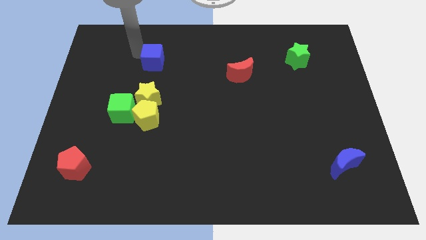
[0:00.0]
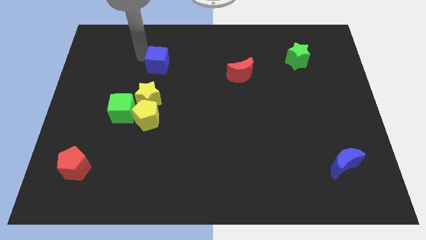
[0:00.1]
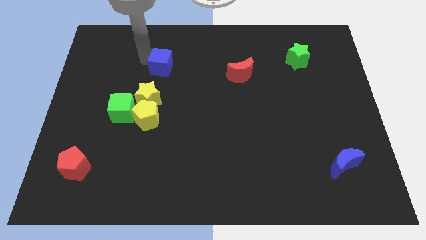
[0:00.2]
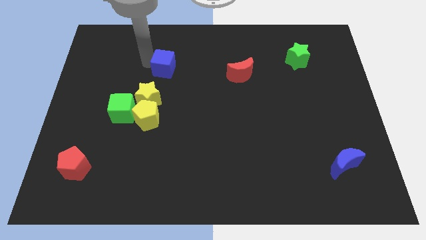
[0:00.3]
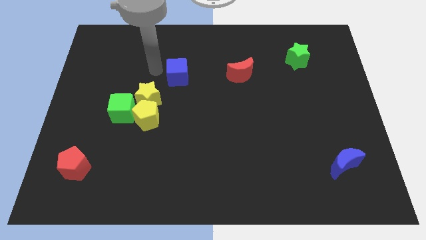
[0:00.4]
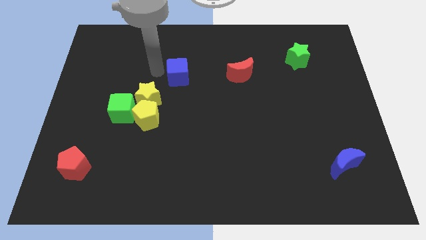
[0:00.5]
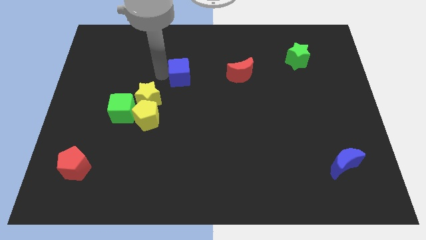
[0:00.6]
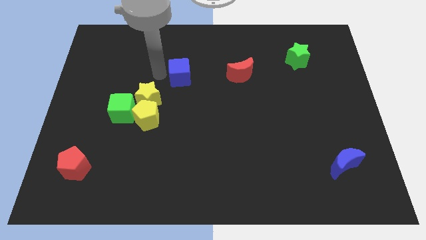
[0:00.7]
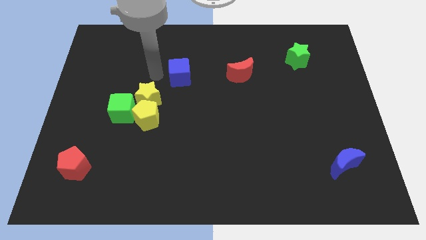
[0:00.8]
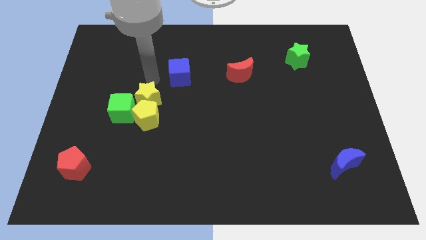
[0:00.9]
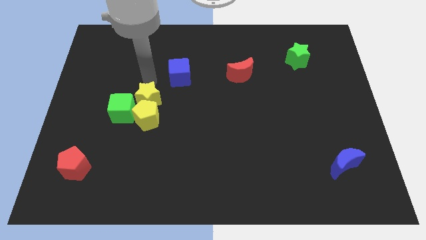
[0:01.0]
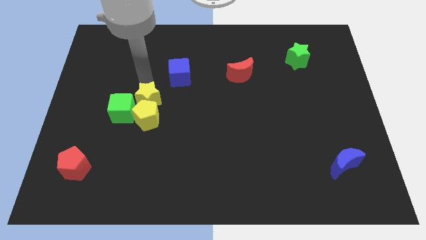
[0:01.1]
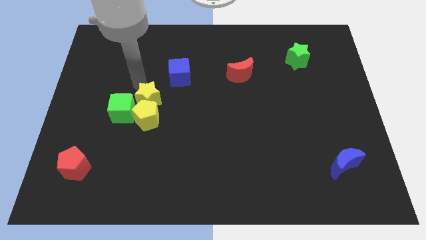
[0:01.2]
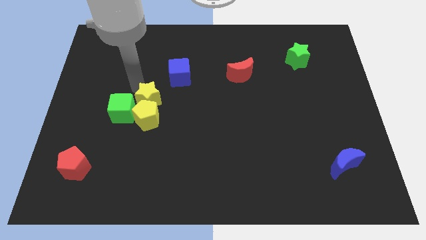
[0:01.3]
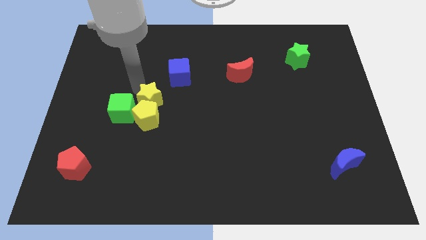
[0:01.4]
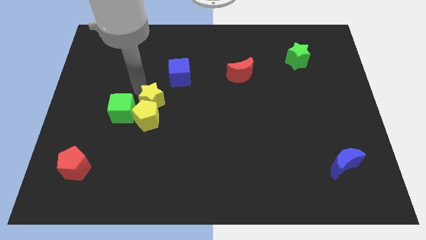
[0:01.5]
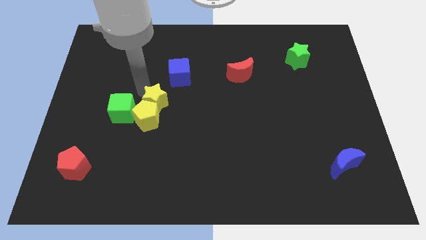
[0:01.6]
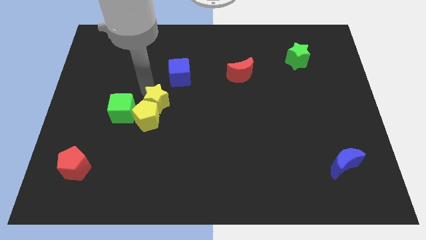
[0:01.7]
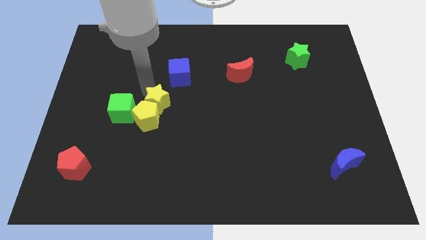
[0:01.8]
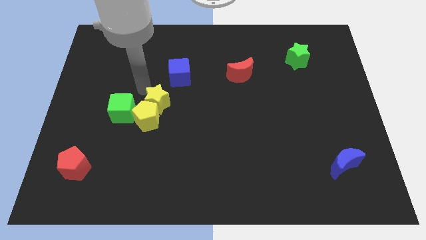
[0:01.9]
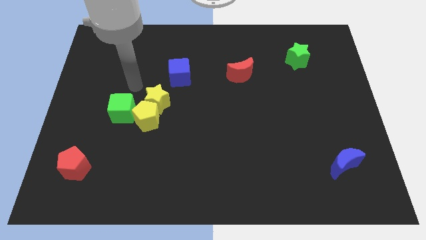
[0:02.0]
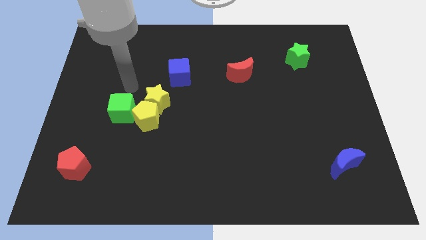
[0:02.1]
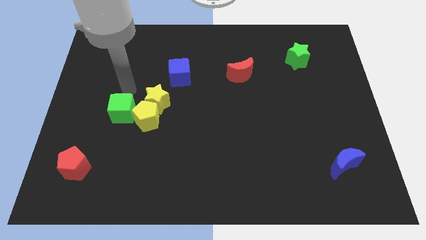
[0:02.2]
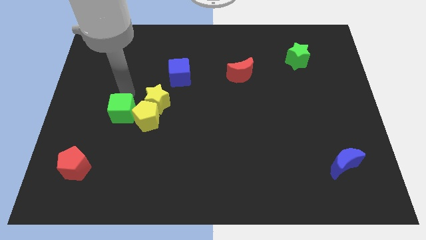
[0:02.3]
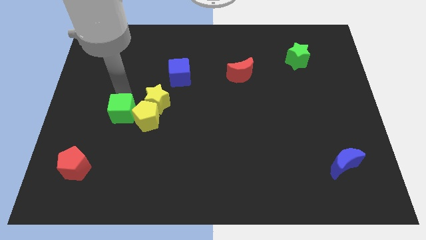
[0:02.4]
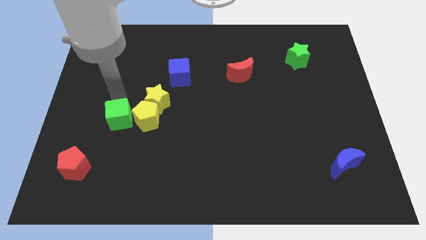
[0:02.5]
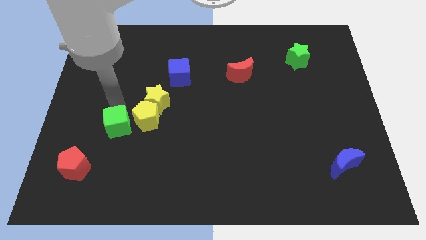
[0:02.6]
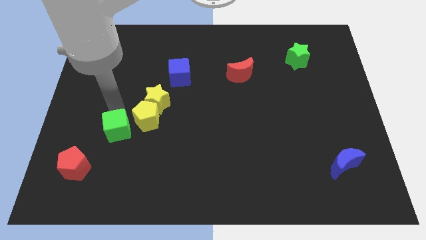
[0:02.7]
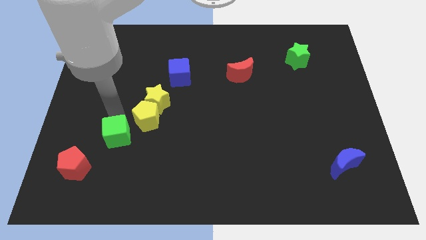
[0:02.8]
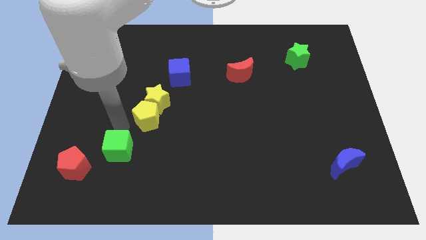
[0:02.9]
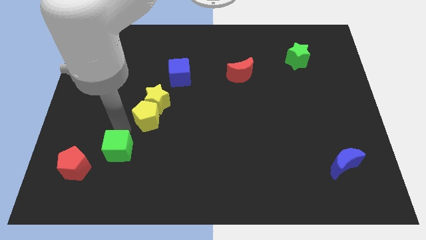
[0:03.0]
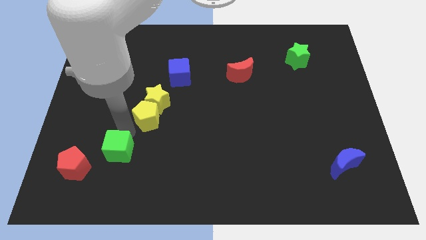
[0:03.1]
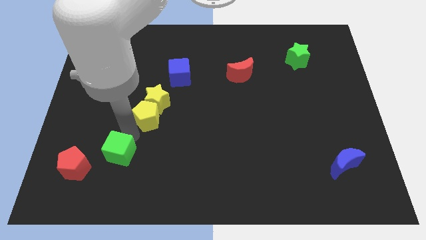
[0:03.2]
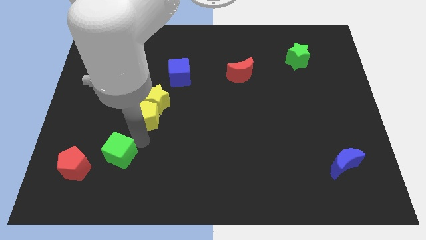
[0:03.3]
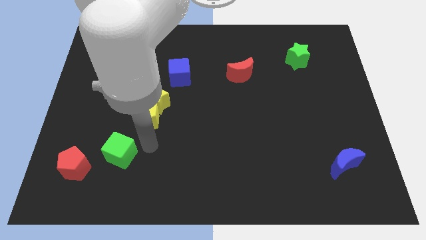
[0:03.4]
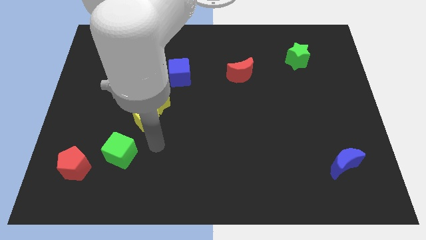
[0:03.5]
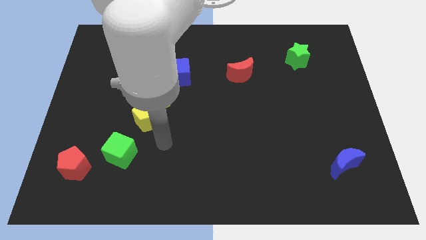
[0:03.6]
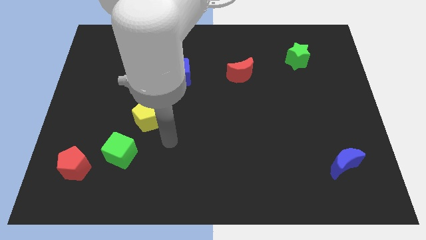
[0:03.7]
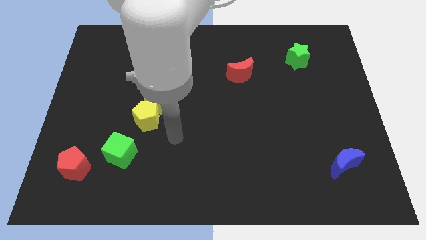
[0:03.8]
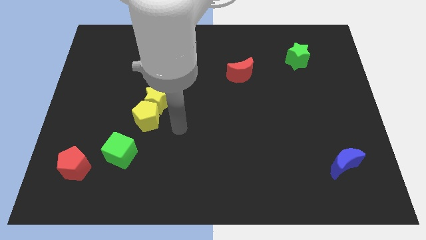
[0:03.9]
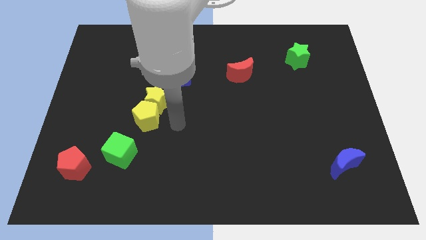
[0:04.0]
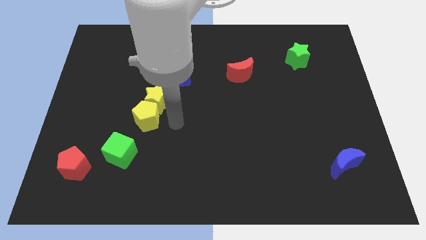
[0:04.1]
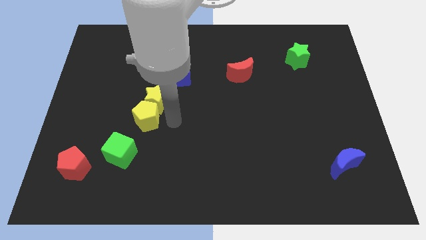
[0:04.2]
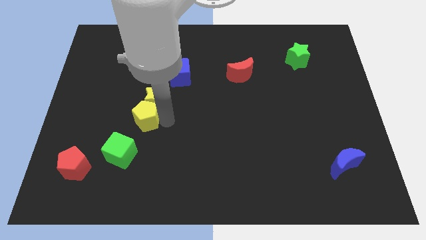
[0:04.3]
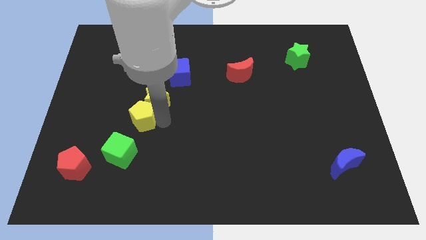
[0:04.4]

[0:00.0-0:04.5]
form a line with blue cube yellow star yellow pentagon and green cube

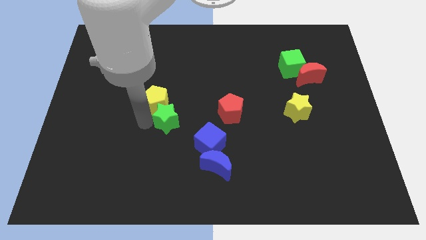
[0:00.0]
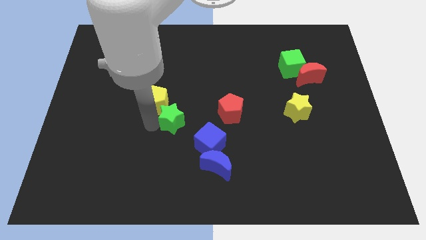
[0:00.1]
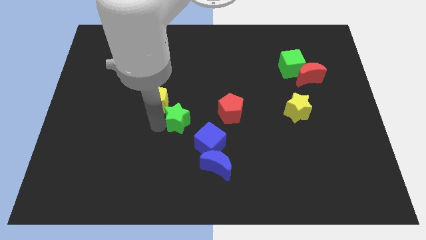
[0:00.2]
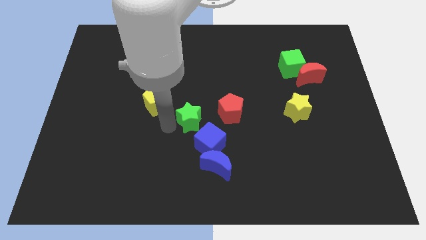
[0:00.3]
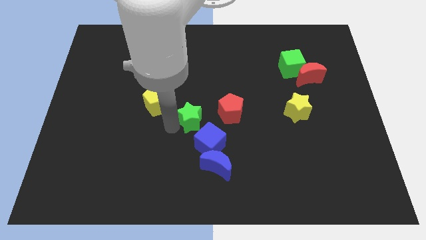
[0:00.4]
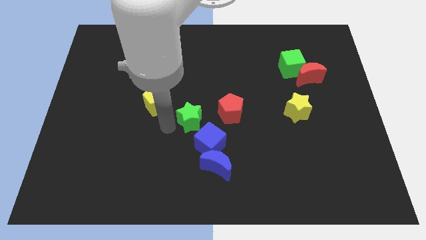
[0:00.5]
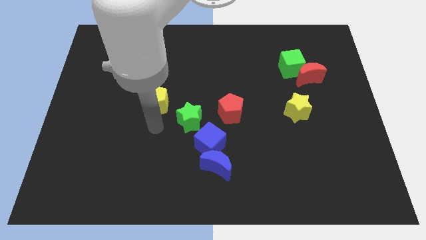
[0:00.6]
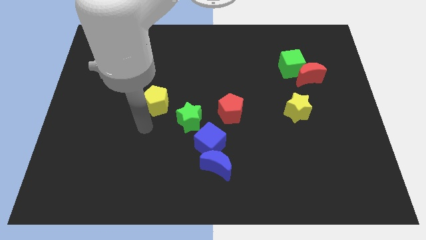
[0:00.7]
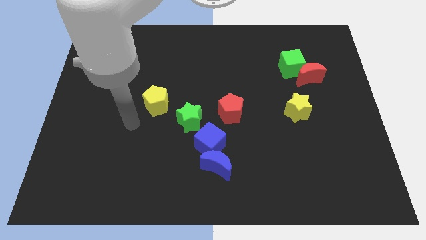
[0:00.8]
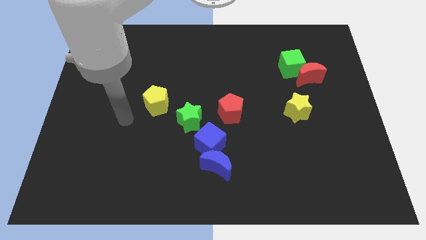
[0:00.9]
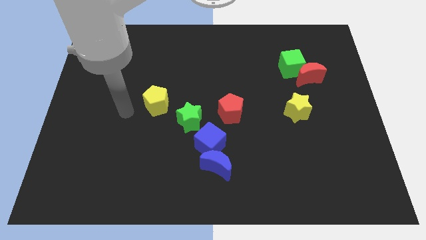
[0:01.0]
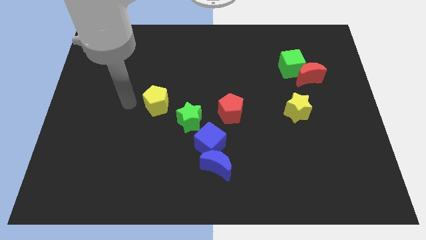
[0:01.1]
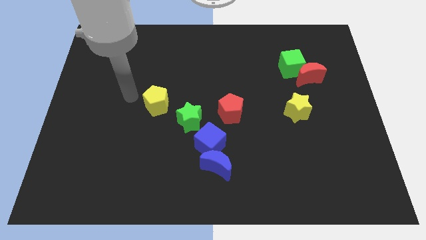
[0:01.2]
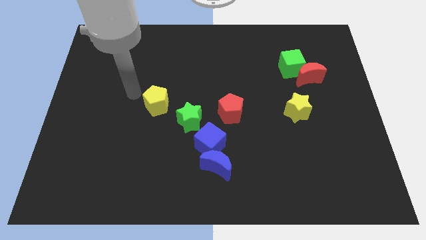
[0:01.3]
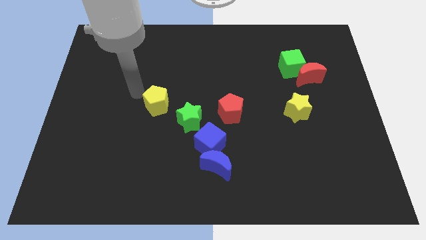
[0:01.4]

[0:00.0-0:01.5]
move the green star towards the red pentagon

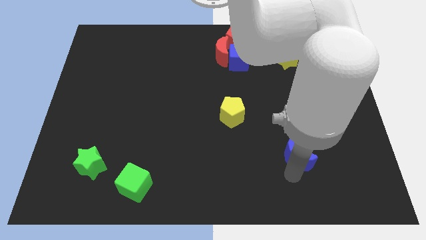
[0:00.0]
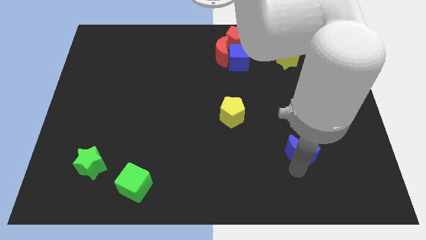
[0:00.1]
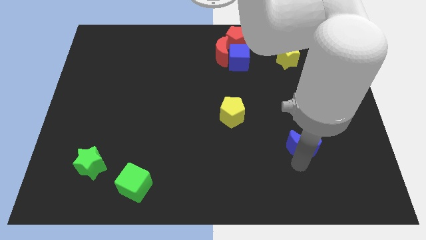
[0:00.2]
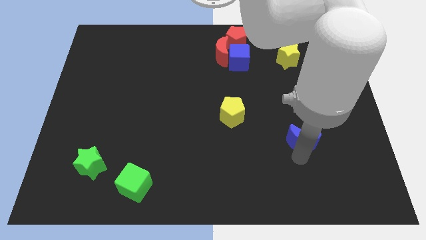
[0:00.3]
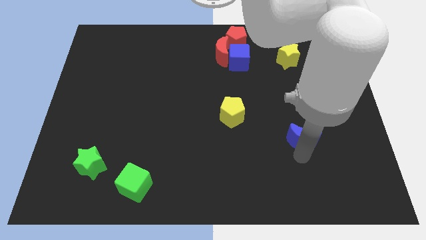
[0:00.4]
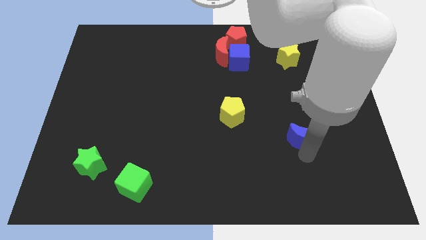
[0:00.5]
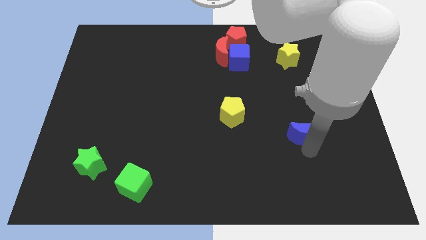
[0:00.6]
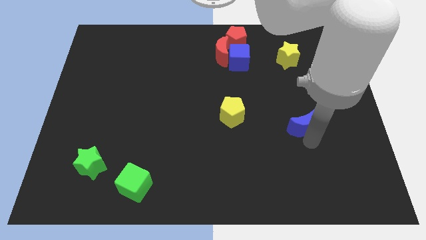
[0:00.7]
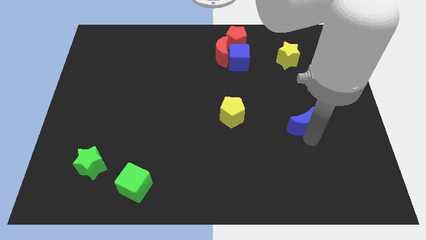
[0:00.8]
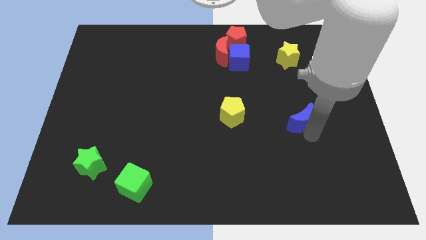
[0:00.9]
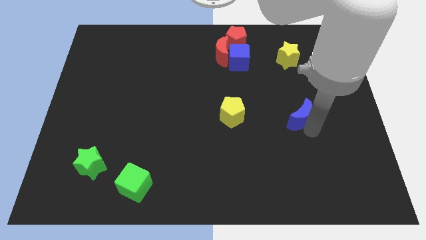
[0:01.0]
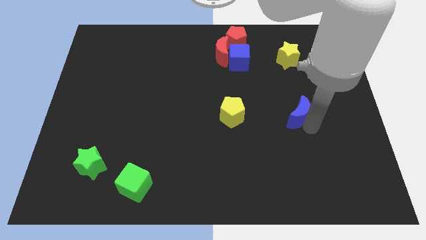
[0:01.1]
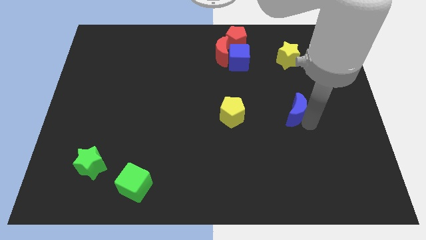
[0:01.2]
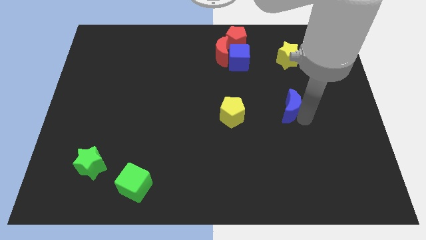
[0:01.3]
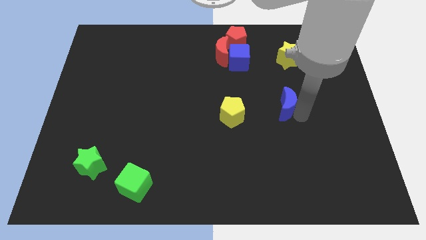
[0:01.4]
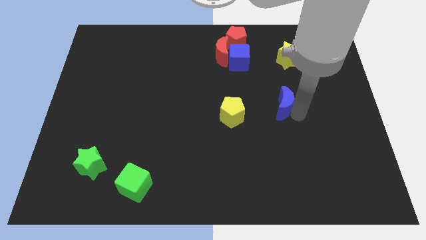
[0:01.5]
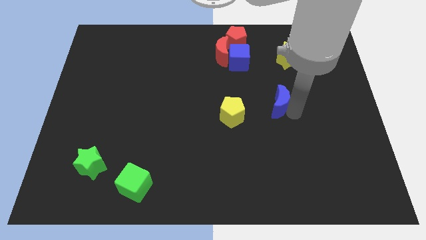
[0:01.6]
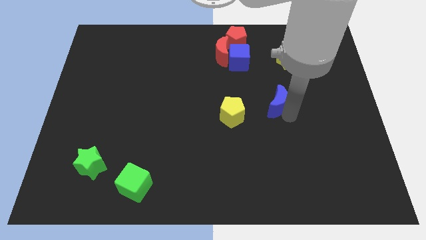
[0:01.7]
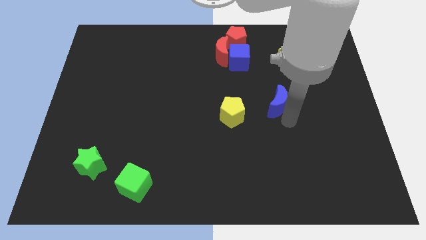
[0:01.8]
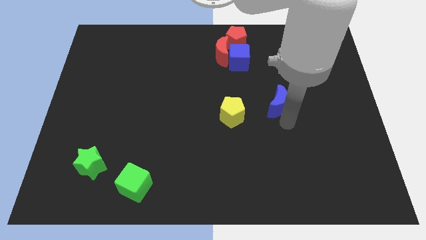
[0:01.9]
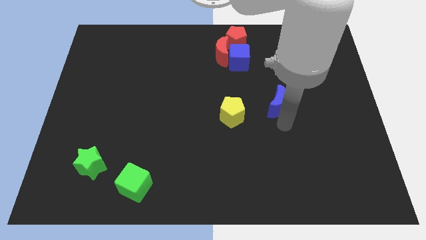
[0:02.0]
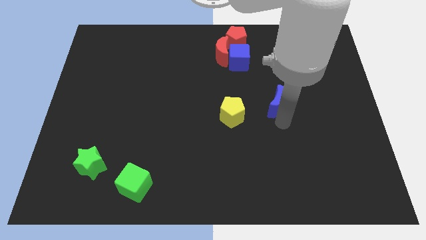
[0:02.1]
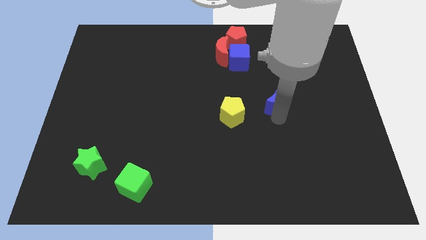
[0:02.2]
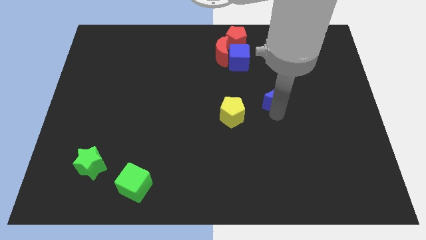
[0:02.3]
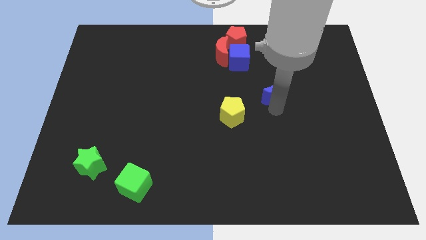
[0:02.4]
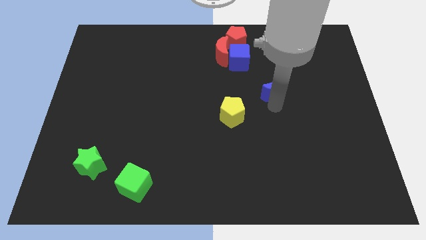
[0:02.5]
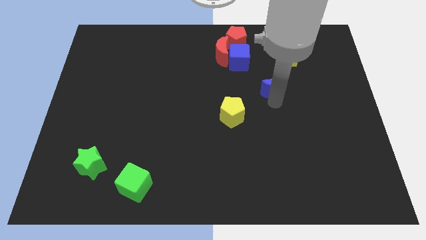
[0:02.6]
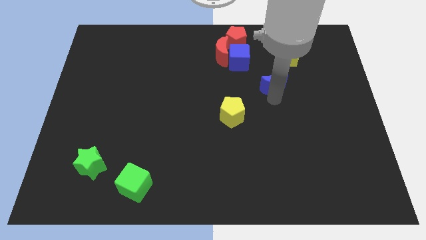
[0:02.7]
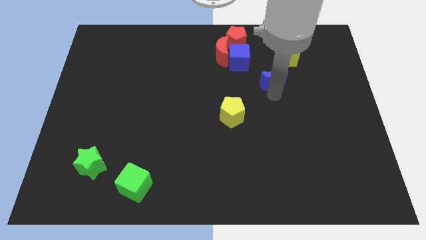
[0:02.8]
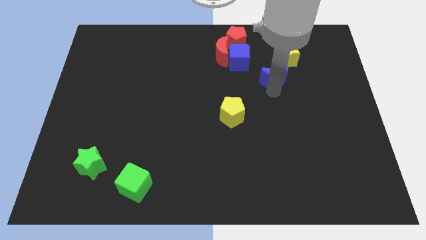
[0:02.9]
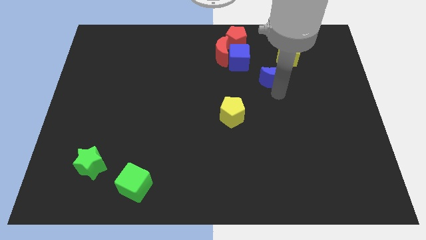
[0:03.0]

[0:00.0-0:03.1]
move blue crescent towards blue cube
